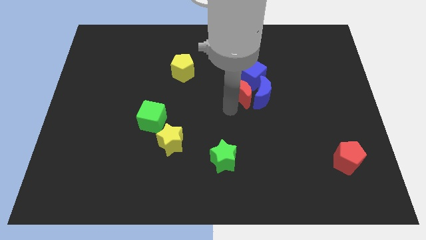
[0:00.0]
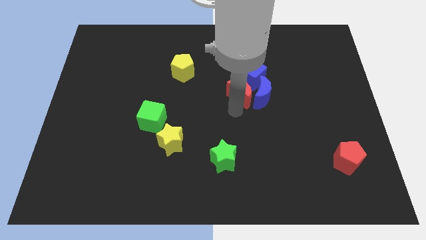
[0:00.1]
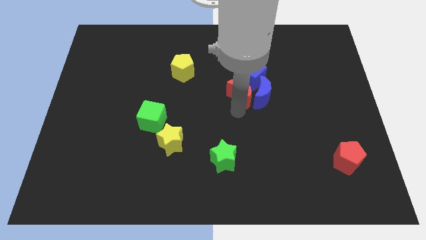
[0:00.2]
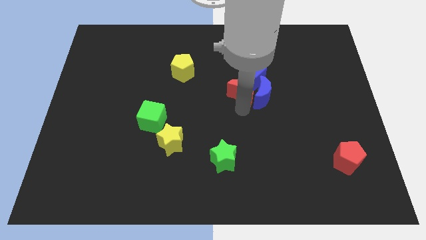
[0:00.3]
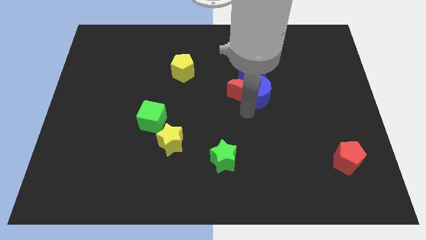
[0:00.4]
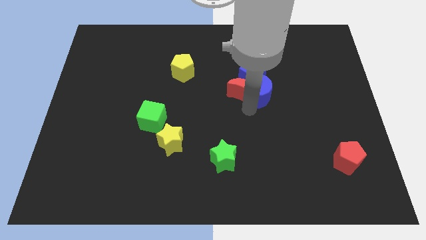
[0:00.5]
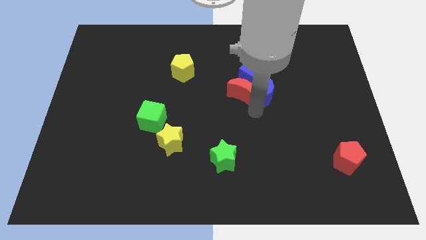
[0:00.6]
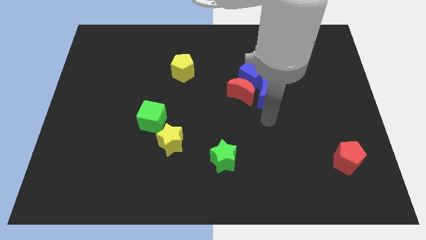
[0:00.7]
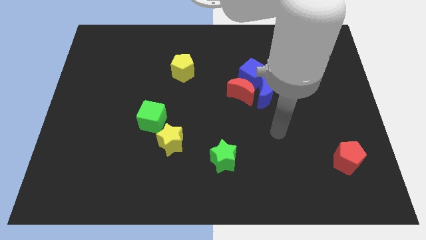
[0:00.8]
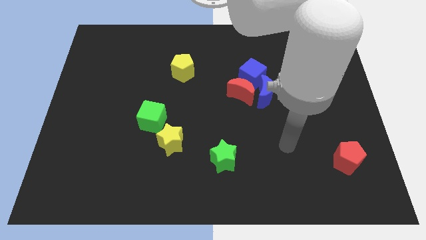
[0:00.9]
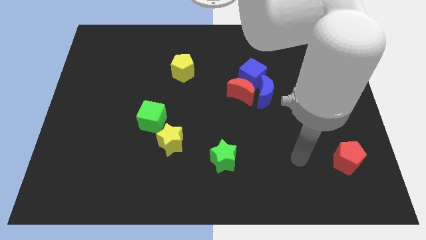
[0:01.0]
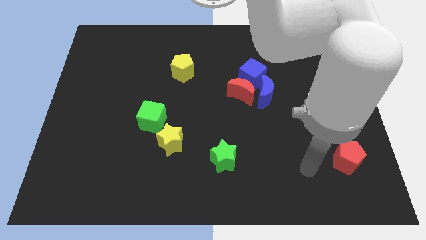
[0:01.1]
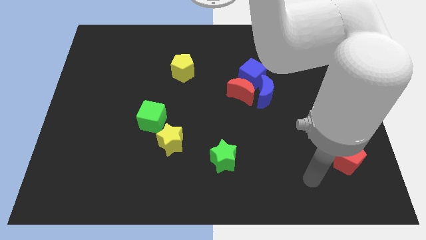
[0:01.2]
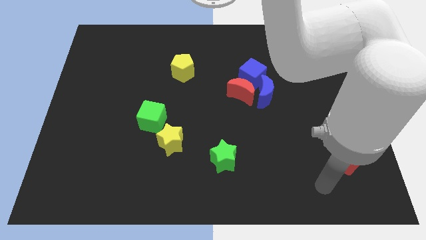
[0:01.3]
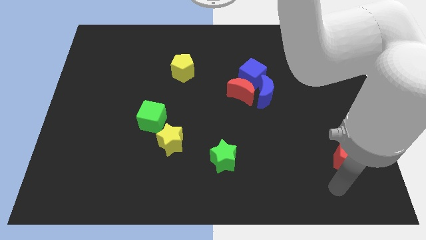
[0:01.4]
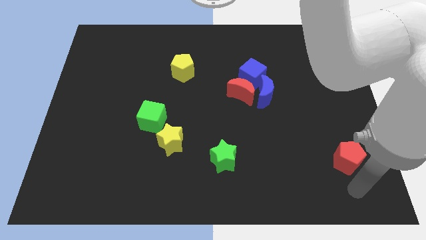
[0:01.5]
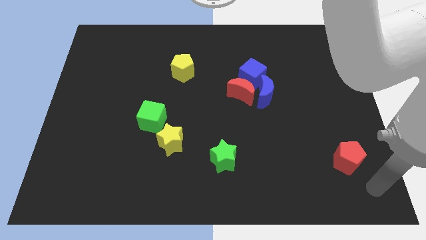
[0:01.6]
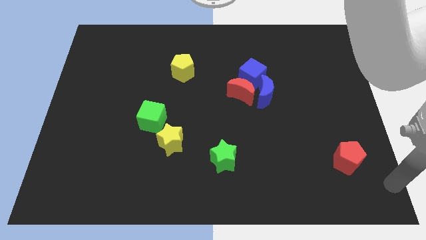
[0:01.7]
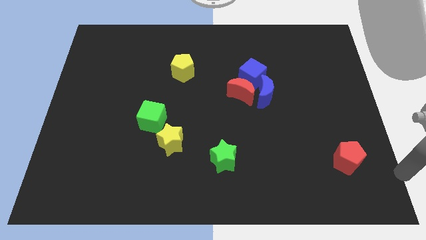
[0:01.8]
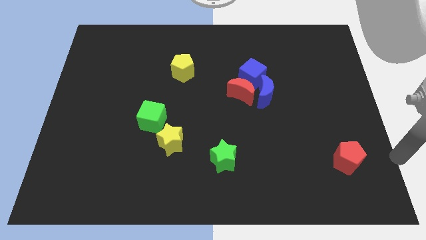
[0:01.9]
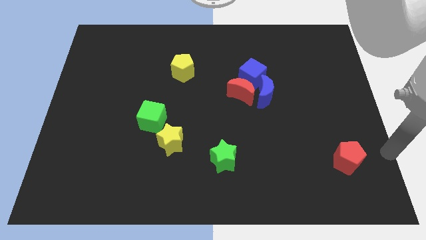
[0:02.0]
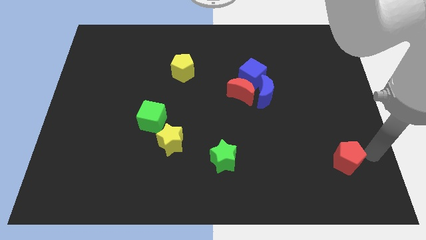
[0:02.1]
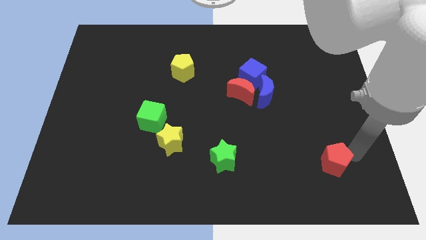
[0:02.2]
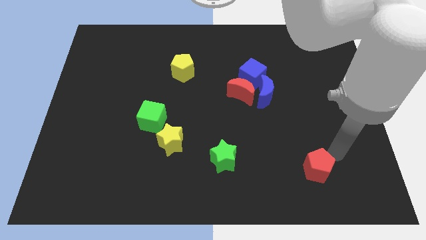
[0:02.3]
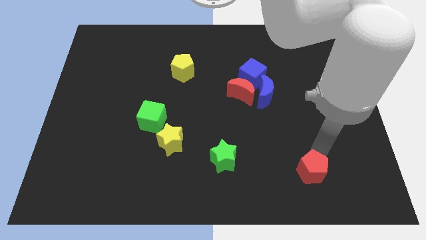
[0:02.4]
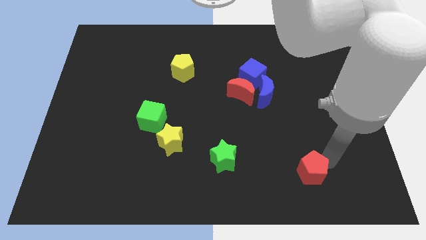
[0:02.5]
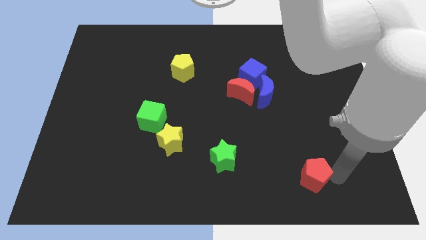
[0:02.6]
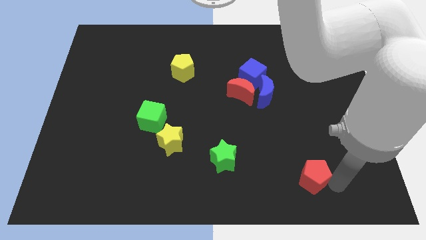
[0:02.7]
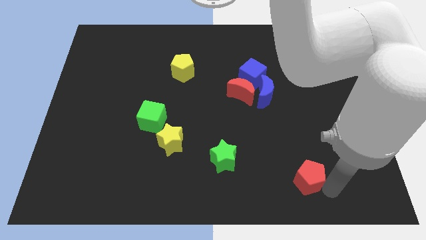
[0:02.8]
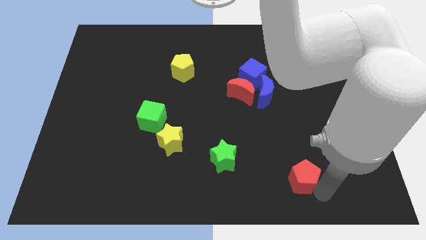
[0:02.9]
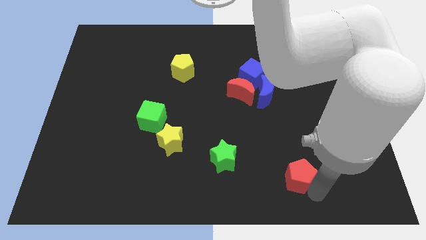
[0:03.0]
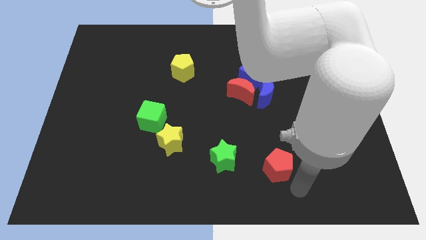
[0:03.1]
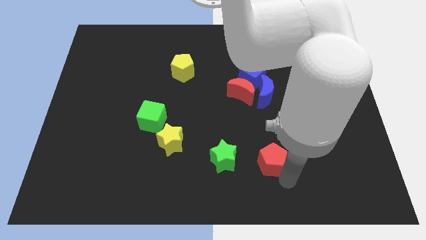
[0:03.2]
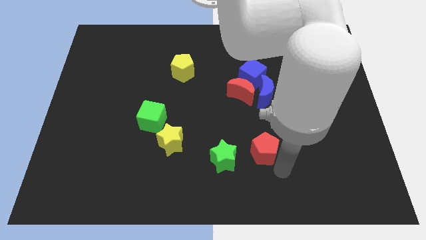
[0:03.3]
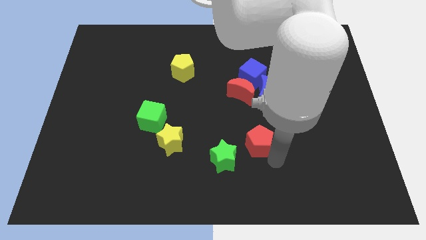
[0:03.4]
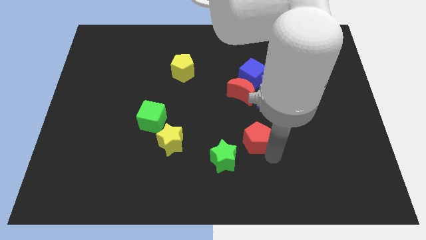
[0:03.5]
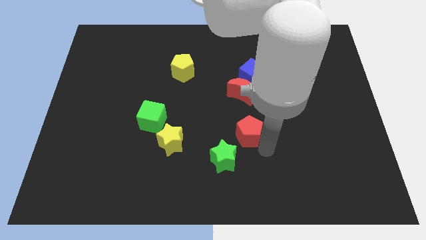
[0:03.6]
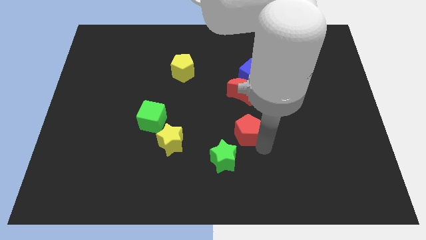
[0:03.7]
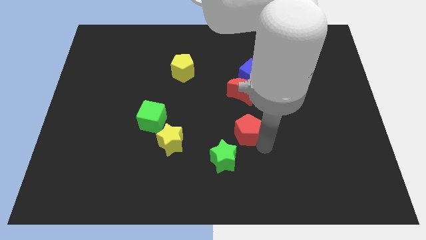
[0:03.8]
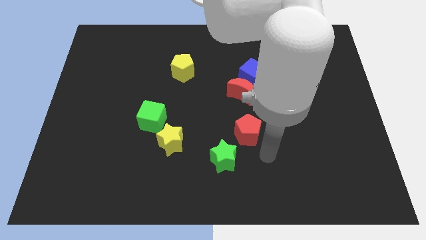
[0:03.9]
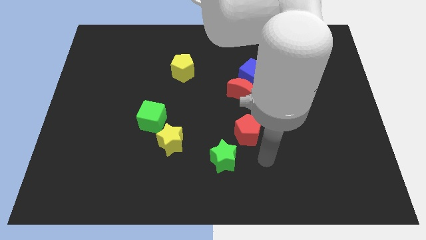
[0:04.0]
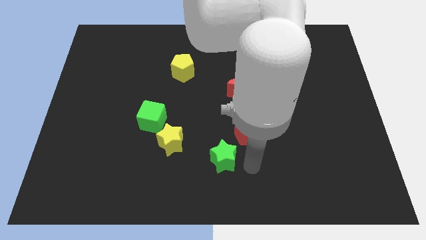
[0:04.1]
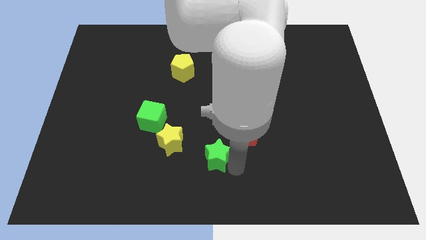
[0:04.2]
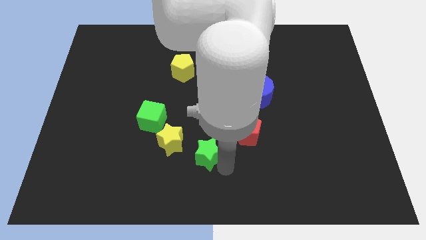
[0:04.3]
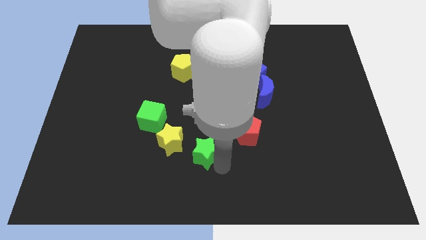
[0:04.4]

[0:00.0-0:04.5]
push the red pentagon towards the yellow star which is at the center of the board

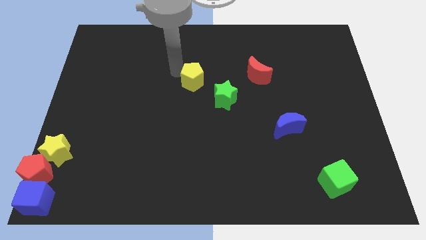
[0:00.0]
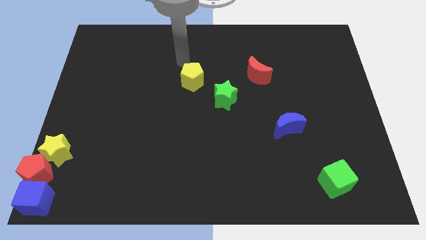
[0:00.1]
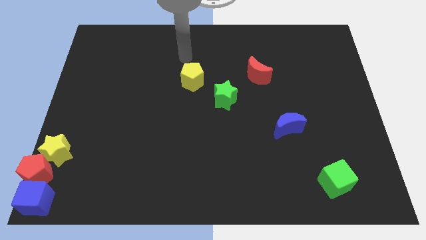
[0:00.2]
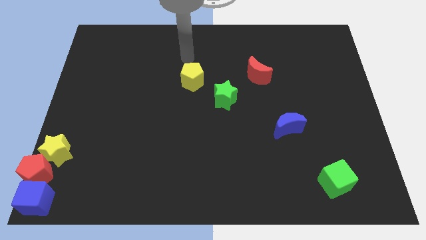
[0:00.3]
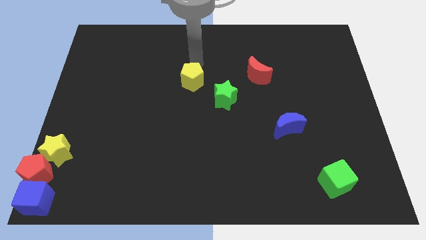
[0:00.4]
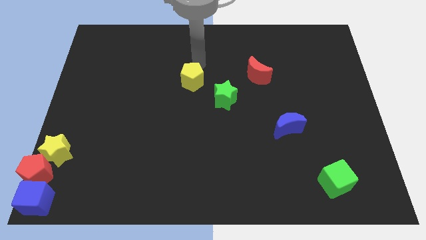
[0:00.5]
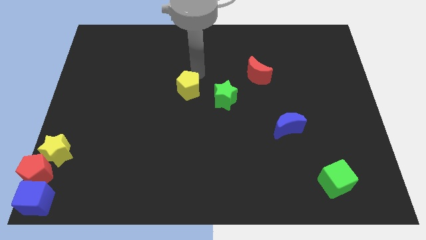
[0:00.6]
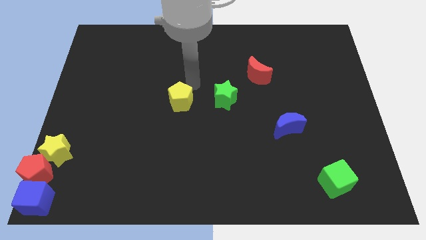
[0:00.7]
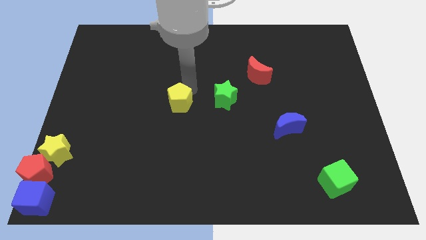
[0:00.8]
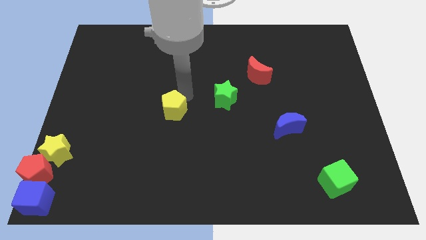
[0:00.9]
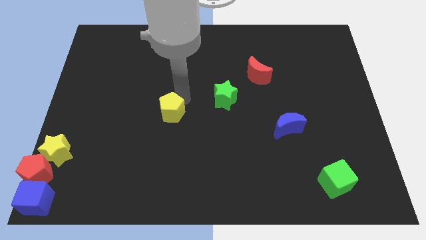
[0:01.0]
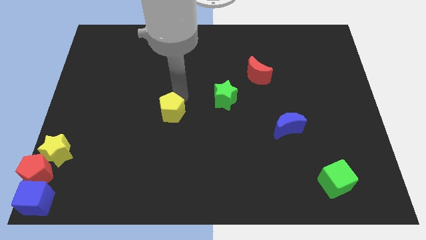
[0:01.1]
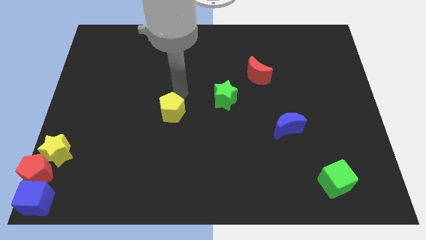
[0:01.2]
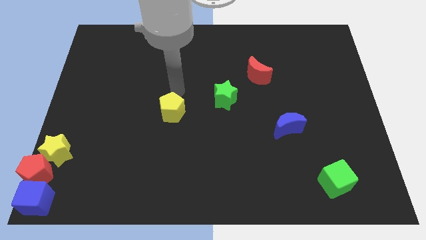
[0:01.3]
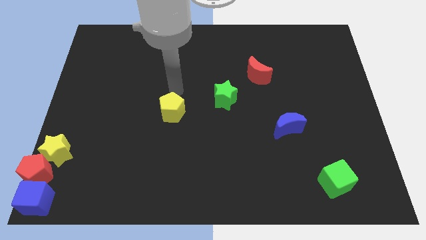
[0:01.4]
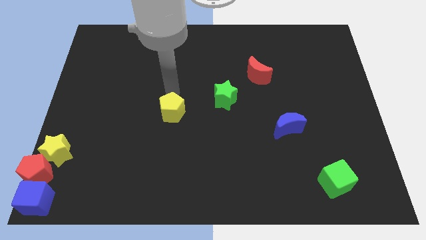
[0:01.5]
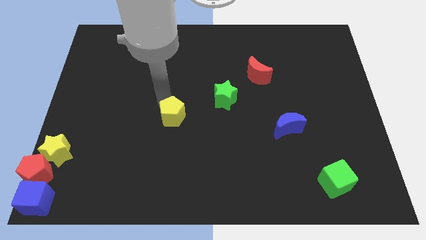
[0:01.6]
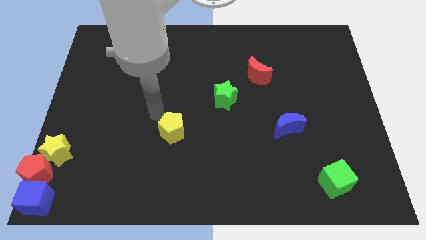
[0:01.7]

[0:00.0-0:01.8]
slide the yellow pentagon away from the top left side of the green star

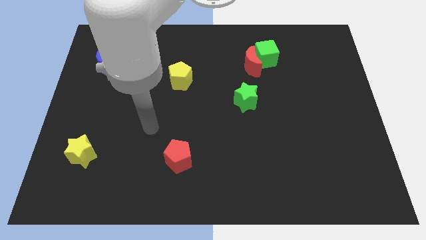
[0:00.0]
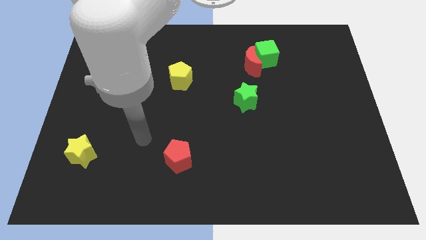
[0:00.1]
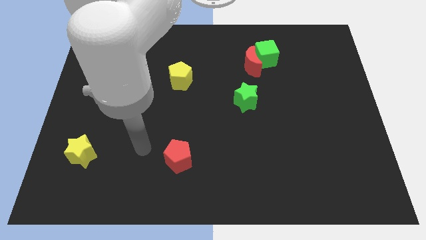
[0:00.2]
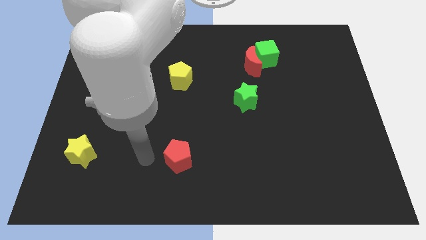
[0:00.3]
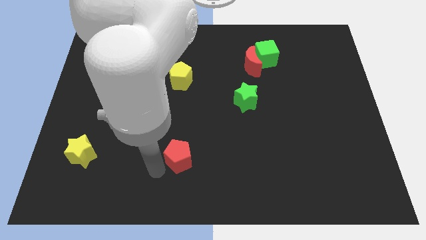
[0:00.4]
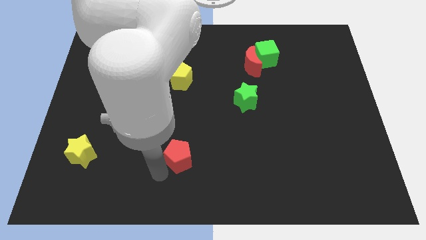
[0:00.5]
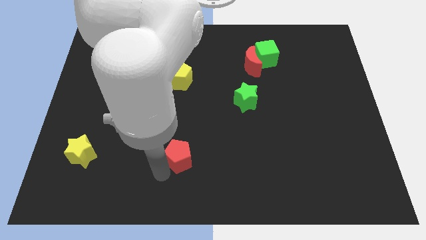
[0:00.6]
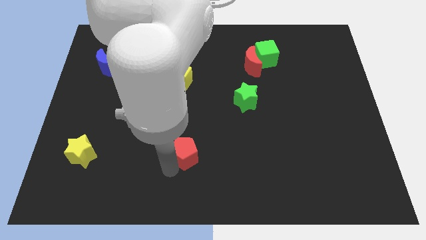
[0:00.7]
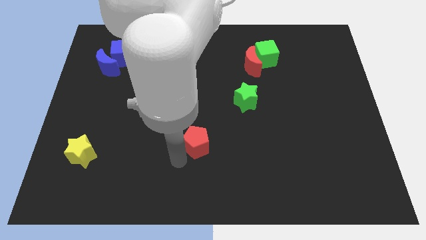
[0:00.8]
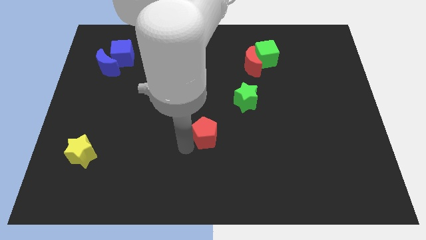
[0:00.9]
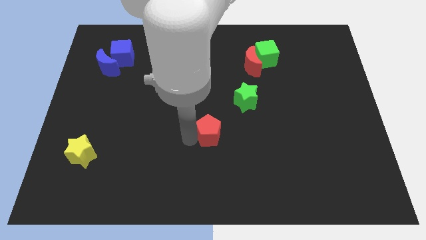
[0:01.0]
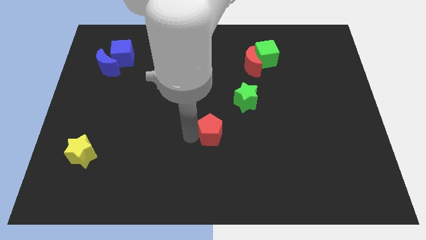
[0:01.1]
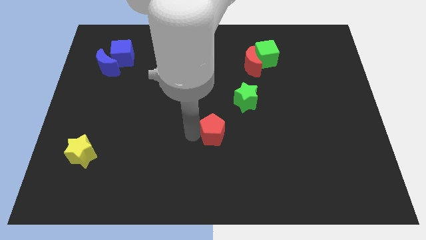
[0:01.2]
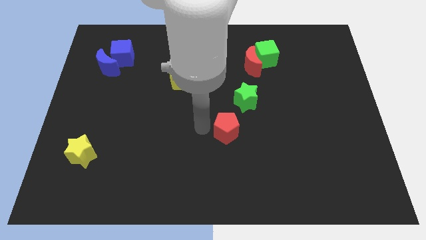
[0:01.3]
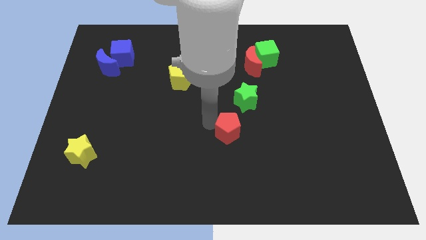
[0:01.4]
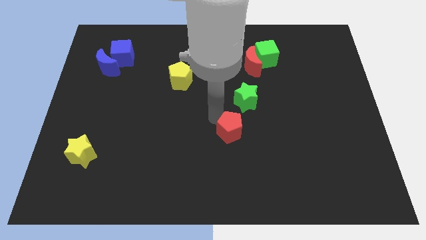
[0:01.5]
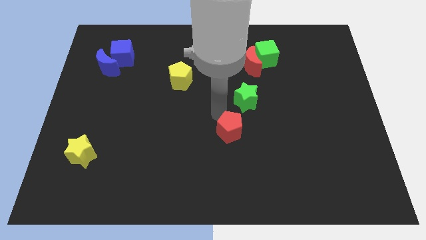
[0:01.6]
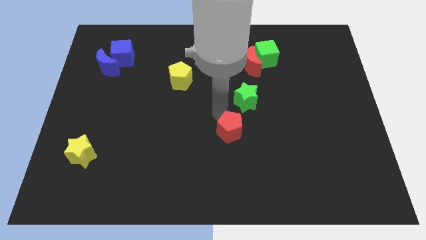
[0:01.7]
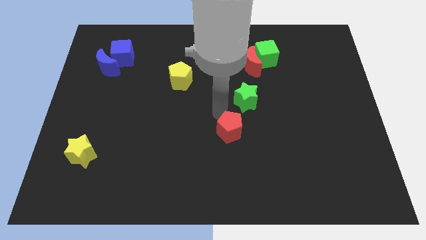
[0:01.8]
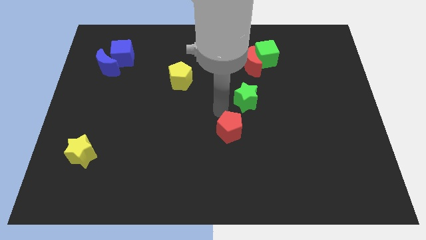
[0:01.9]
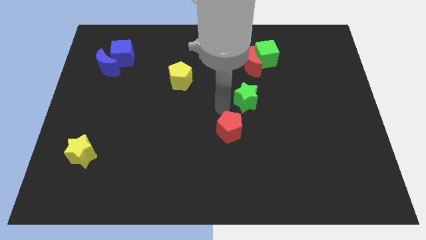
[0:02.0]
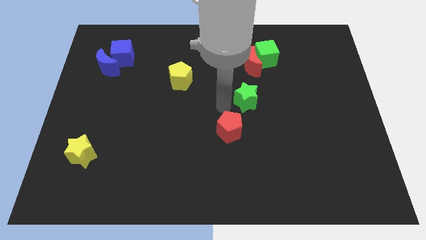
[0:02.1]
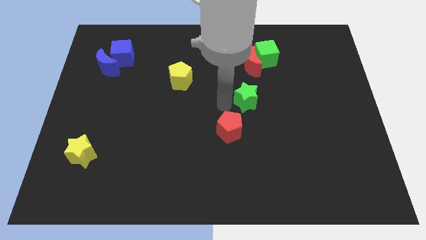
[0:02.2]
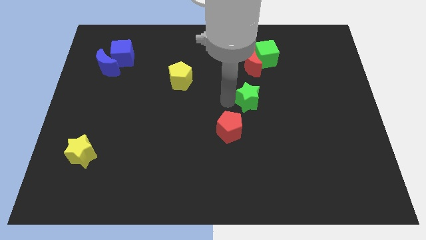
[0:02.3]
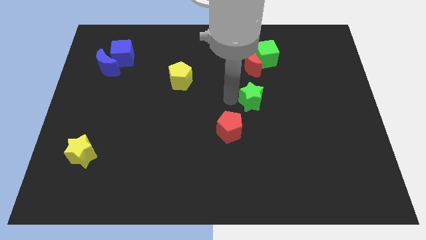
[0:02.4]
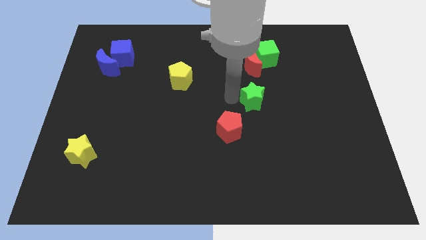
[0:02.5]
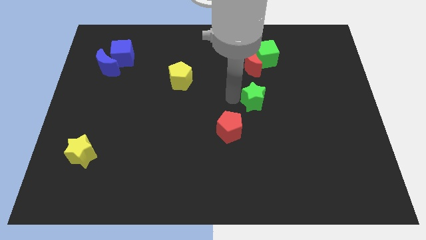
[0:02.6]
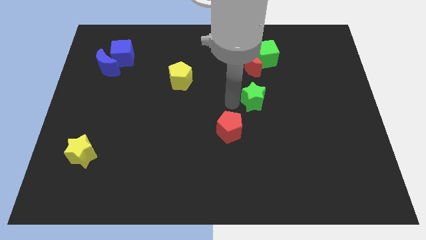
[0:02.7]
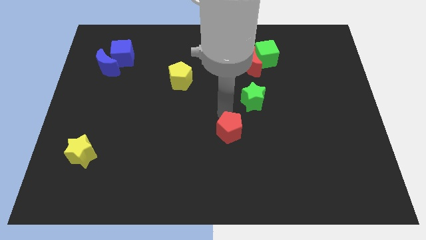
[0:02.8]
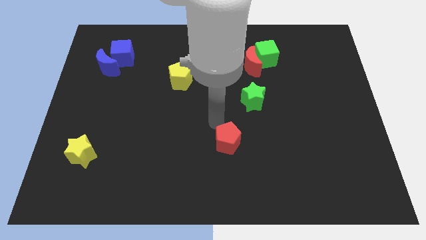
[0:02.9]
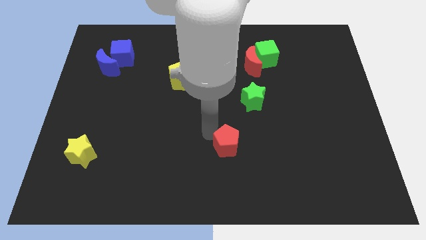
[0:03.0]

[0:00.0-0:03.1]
move red pentagon middle of the board
